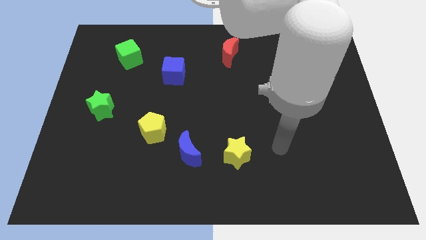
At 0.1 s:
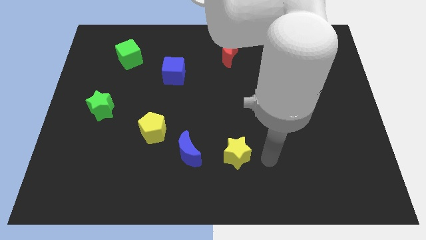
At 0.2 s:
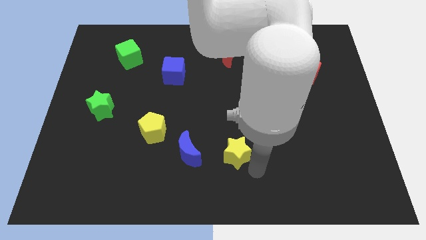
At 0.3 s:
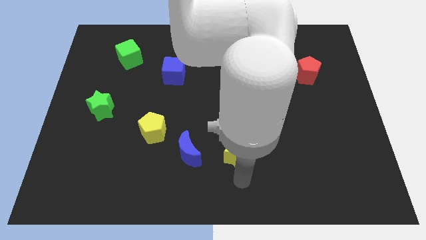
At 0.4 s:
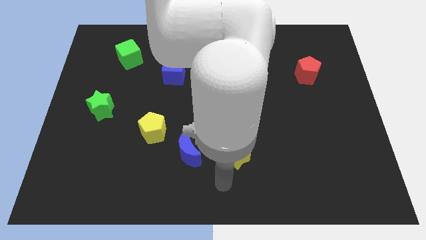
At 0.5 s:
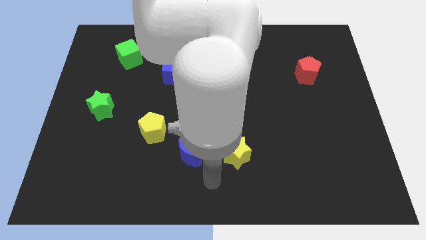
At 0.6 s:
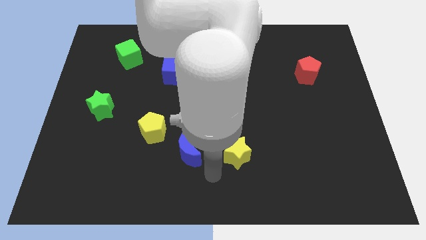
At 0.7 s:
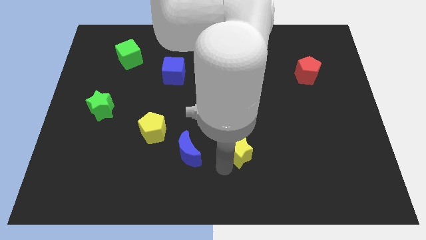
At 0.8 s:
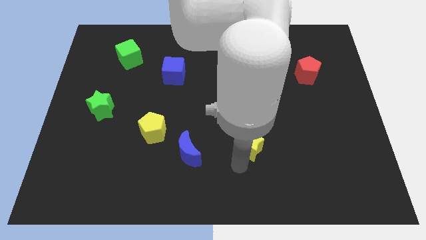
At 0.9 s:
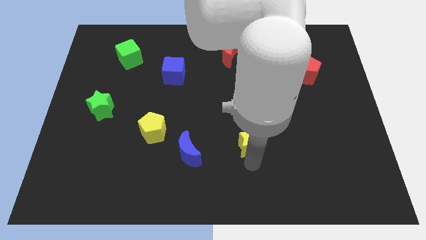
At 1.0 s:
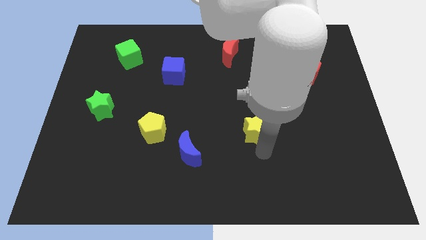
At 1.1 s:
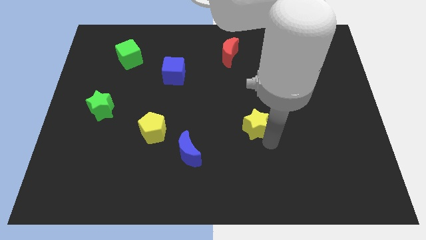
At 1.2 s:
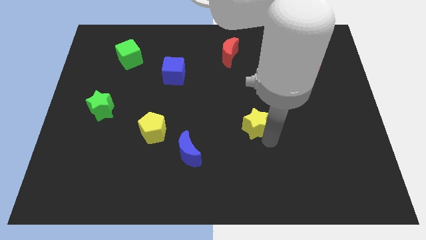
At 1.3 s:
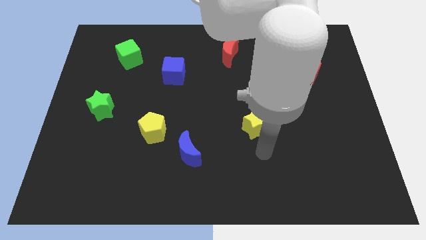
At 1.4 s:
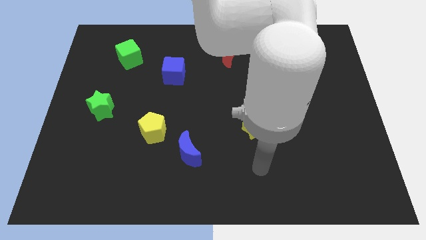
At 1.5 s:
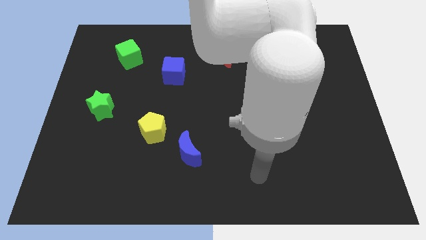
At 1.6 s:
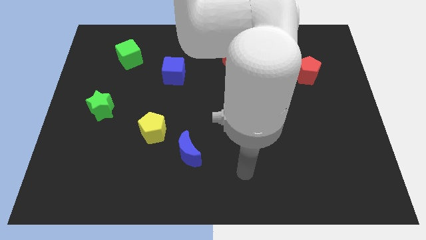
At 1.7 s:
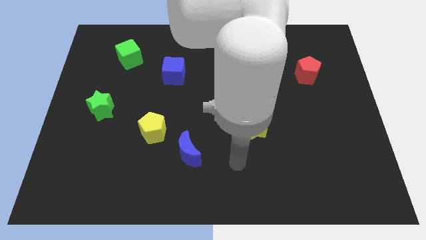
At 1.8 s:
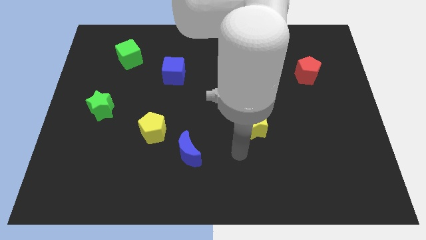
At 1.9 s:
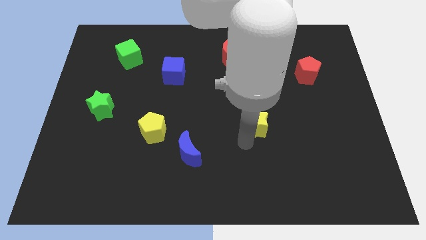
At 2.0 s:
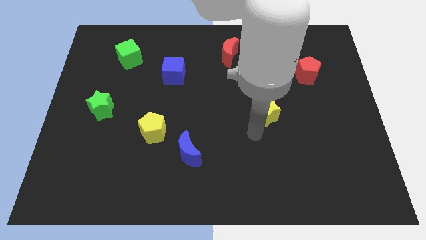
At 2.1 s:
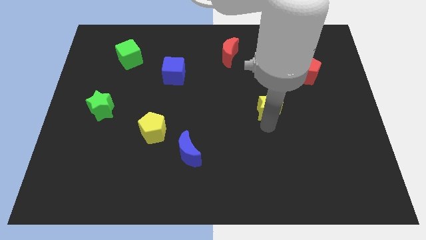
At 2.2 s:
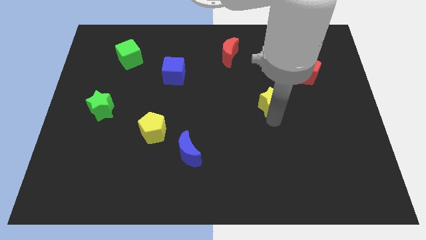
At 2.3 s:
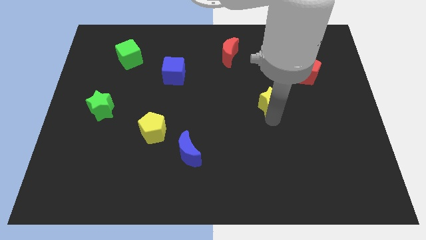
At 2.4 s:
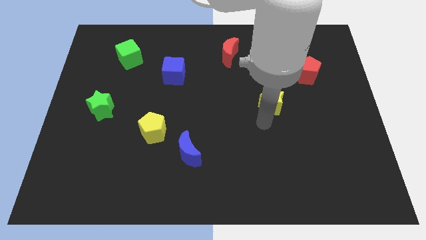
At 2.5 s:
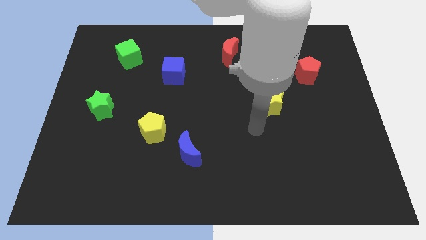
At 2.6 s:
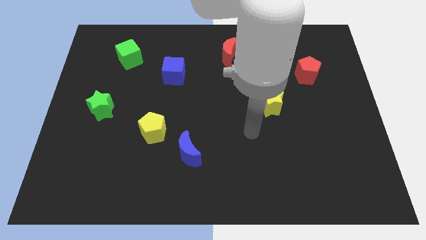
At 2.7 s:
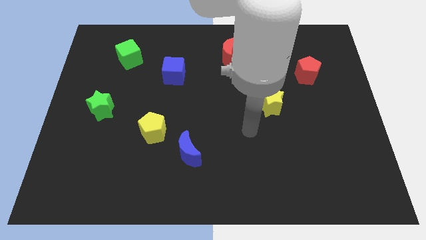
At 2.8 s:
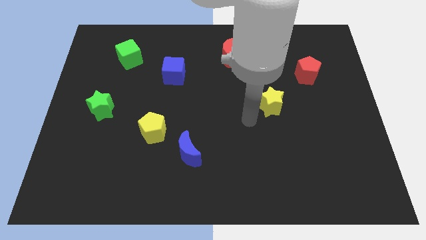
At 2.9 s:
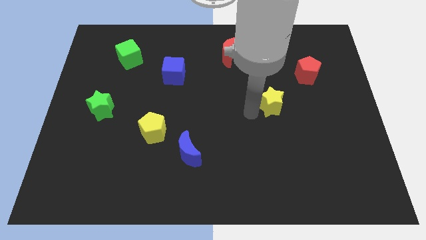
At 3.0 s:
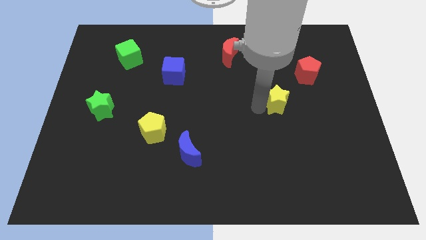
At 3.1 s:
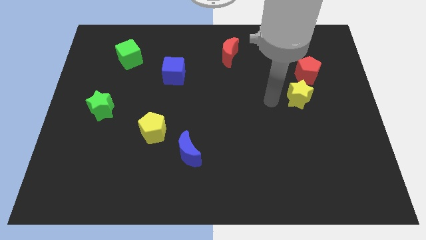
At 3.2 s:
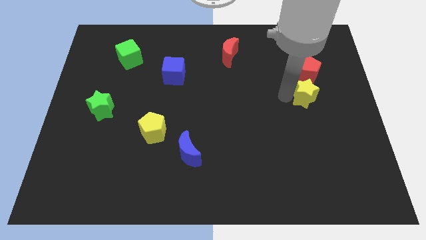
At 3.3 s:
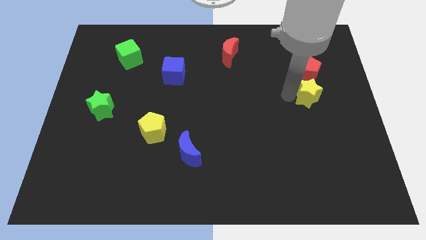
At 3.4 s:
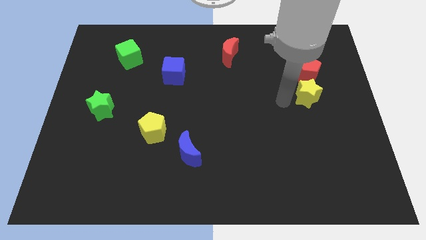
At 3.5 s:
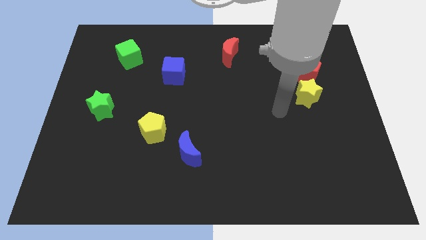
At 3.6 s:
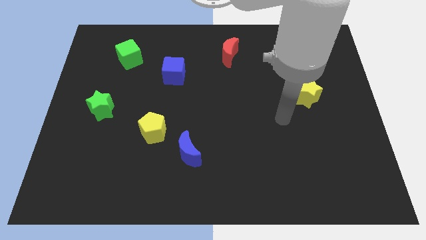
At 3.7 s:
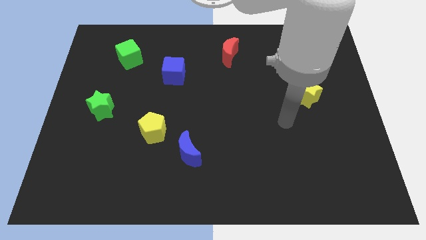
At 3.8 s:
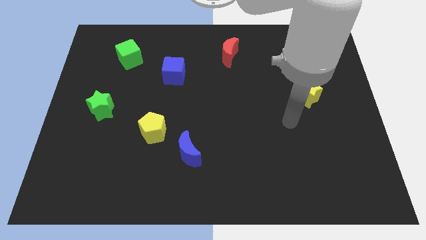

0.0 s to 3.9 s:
place the yellow star below the red pentagon

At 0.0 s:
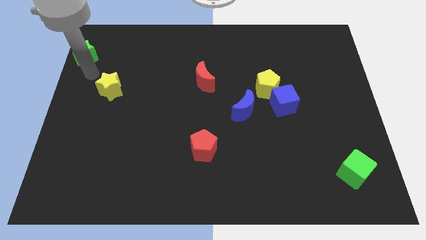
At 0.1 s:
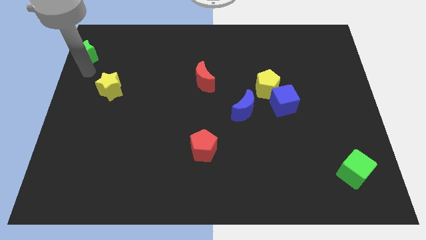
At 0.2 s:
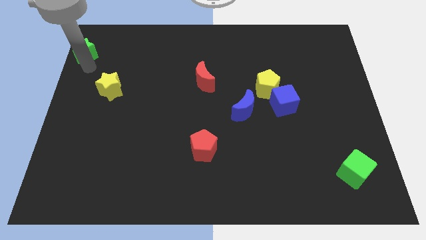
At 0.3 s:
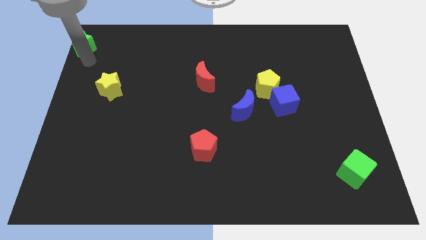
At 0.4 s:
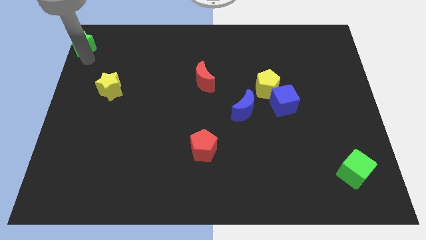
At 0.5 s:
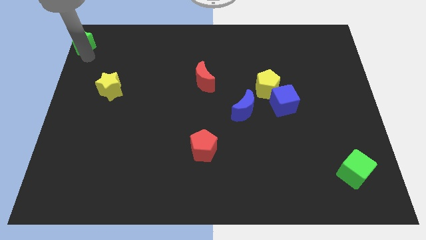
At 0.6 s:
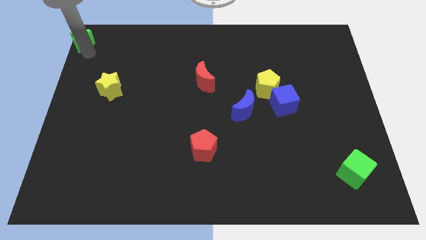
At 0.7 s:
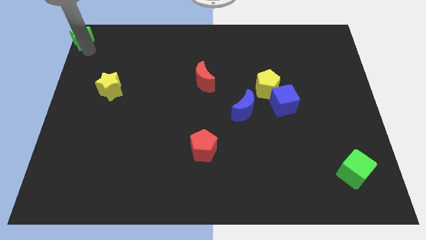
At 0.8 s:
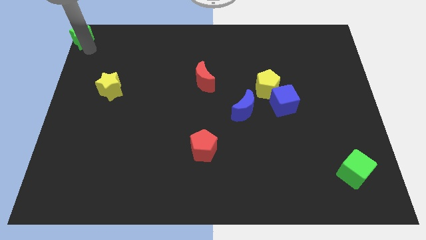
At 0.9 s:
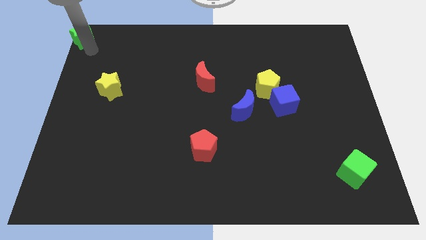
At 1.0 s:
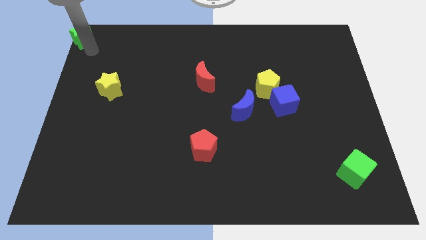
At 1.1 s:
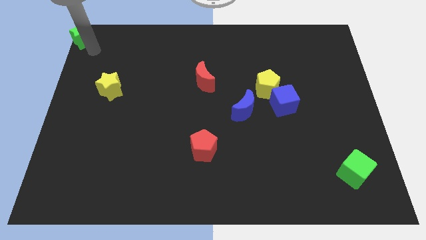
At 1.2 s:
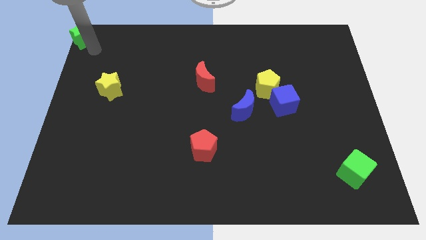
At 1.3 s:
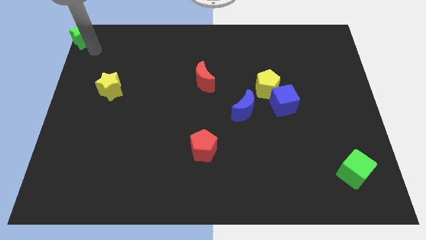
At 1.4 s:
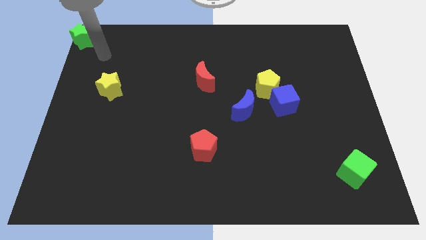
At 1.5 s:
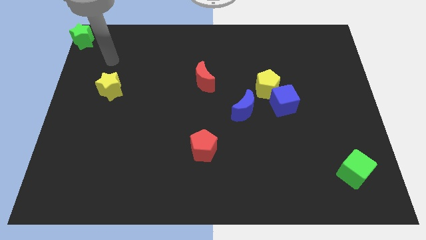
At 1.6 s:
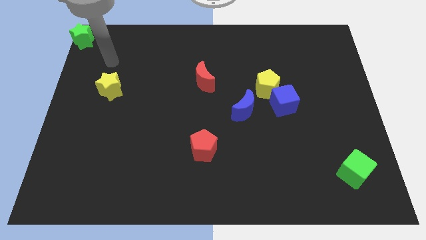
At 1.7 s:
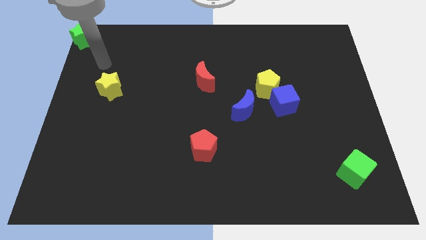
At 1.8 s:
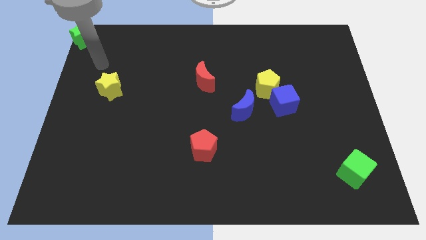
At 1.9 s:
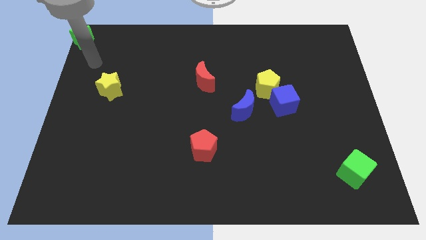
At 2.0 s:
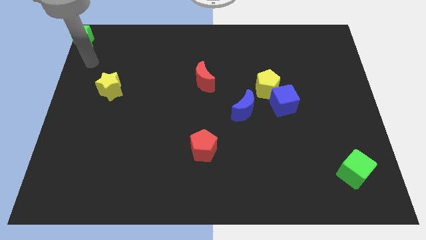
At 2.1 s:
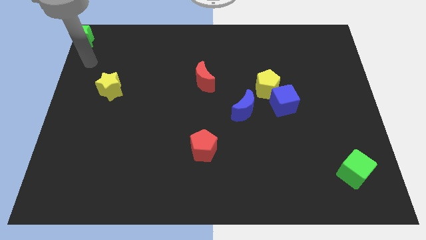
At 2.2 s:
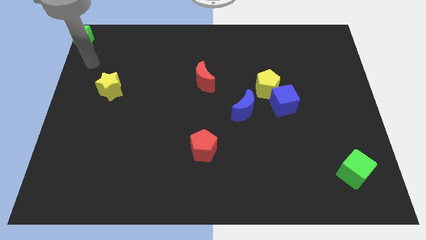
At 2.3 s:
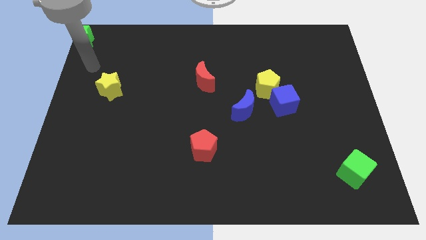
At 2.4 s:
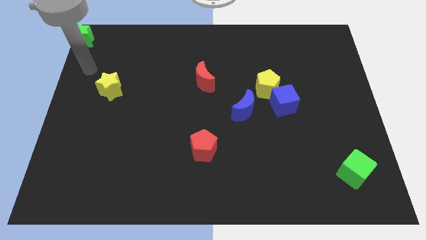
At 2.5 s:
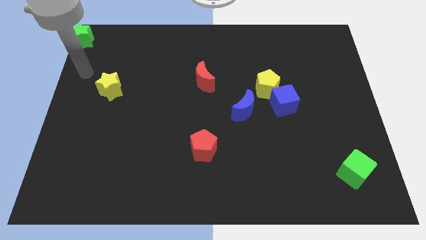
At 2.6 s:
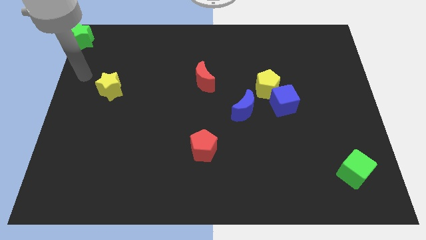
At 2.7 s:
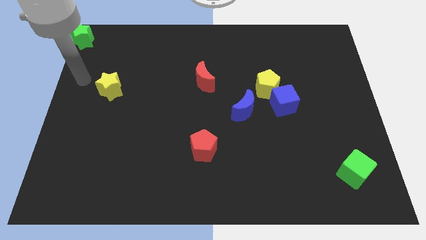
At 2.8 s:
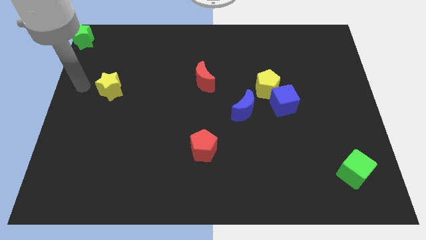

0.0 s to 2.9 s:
move the green star to the top left corner of the board

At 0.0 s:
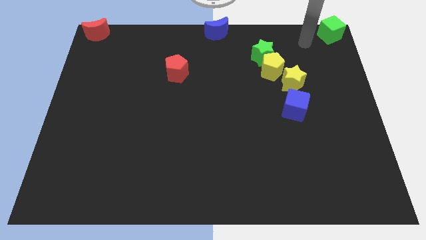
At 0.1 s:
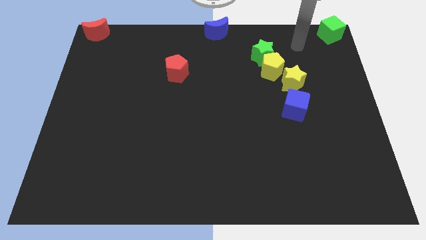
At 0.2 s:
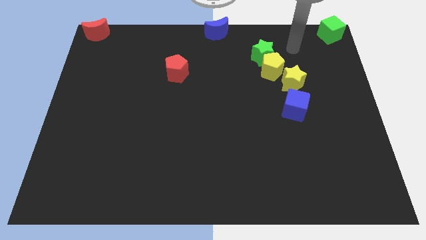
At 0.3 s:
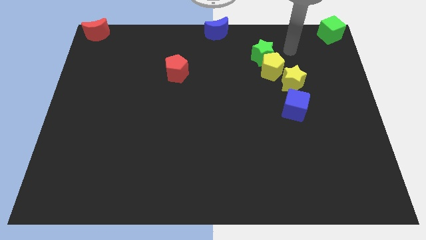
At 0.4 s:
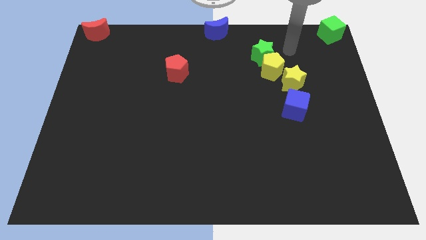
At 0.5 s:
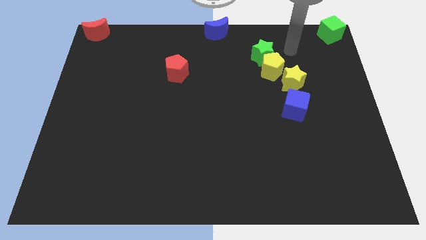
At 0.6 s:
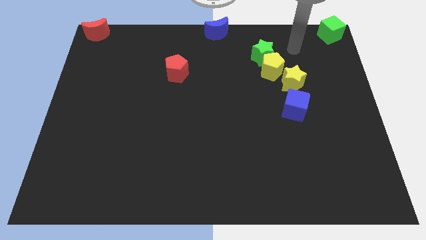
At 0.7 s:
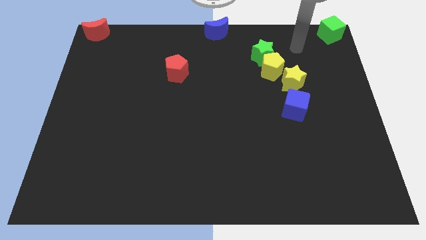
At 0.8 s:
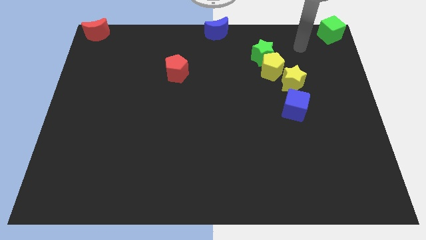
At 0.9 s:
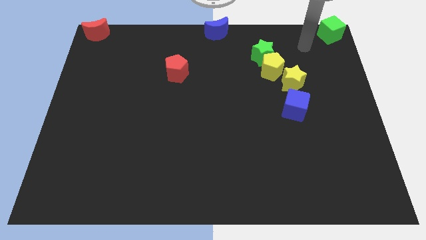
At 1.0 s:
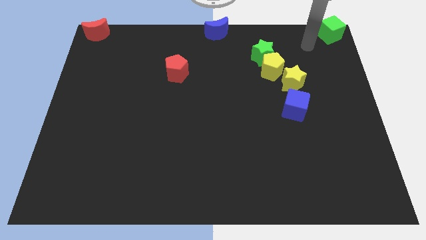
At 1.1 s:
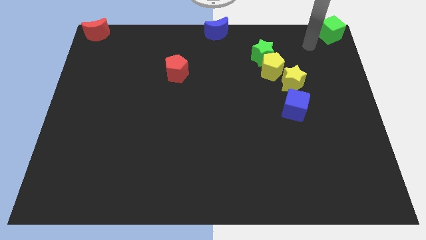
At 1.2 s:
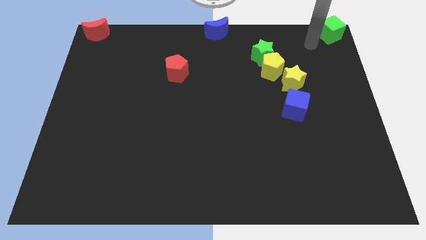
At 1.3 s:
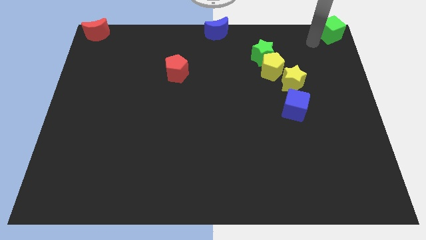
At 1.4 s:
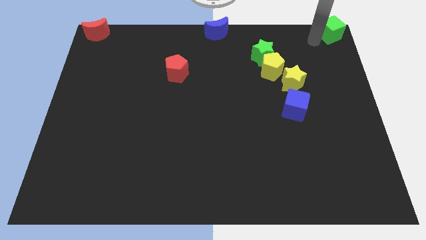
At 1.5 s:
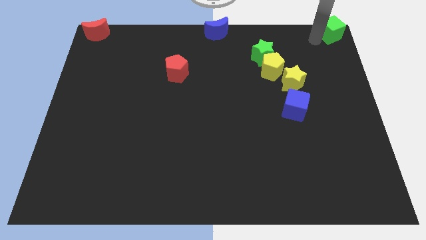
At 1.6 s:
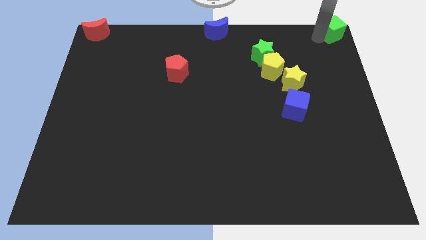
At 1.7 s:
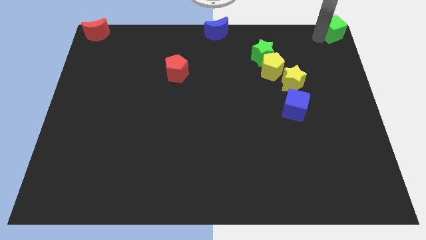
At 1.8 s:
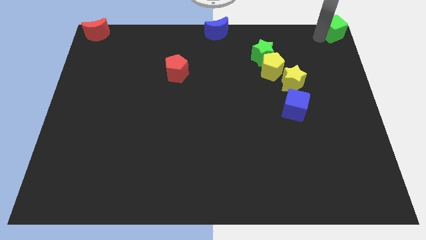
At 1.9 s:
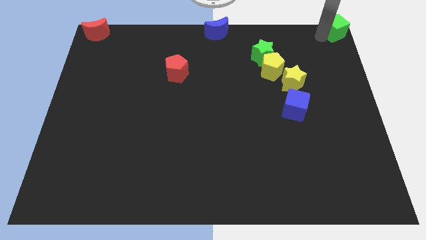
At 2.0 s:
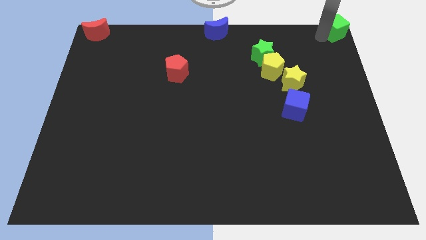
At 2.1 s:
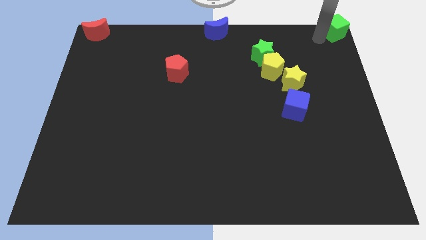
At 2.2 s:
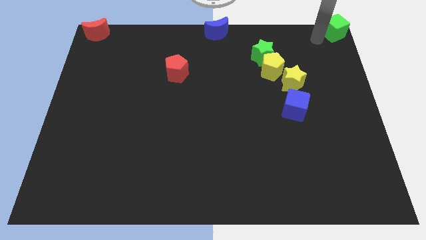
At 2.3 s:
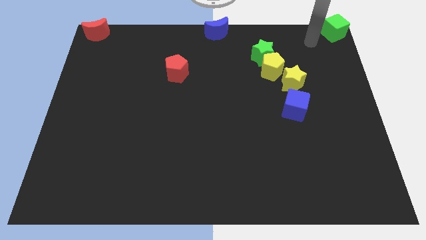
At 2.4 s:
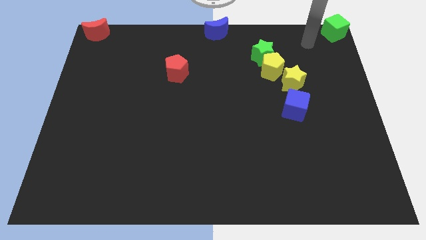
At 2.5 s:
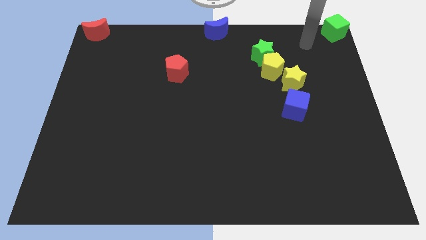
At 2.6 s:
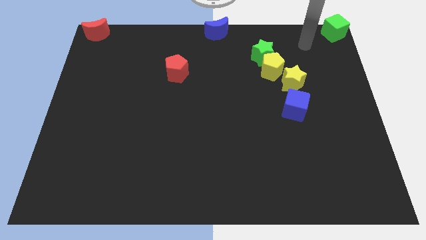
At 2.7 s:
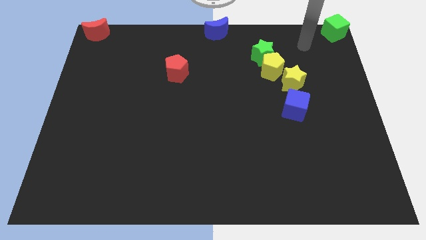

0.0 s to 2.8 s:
put the green cube at the top right corner of the board
